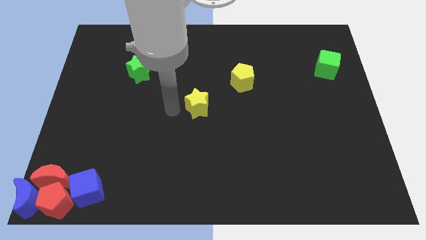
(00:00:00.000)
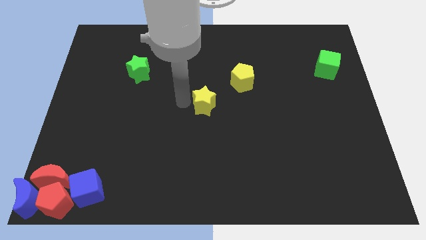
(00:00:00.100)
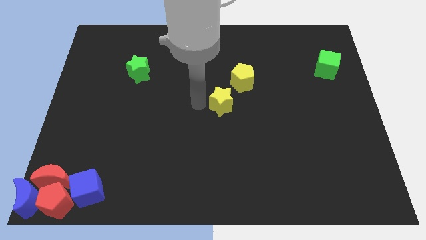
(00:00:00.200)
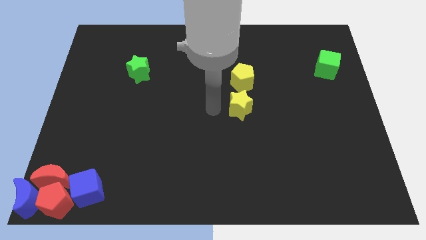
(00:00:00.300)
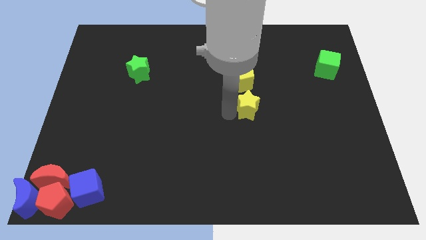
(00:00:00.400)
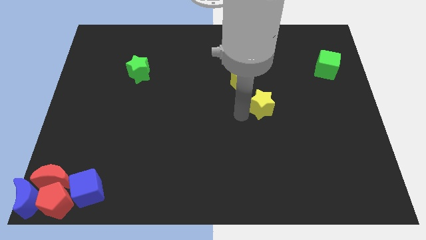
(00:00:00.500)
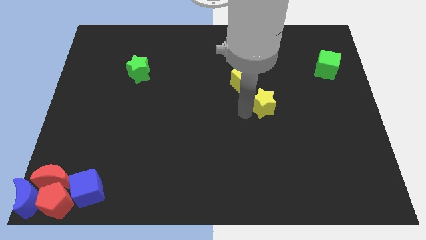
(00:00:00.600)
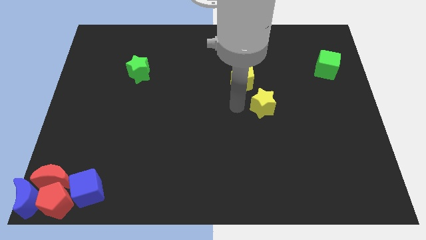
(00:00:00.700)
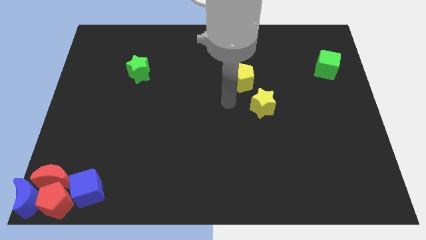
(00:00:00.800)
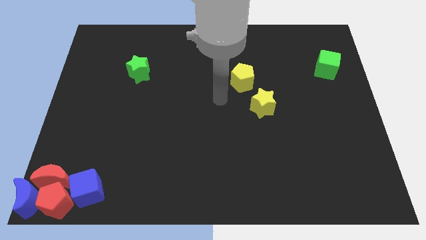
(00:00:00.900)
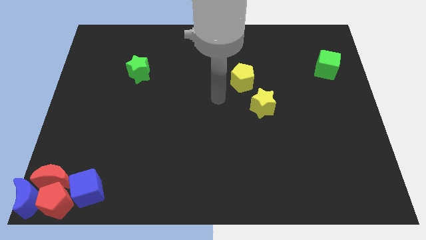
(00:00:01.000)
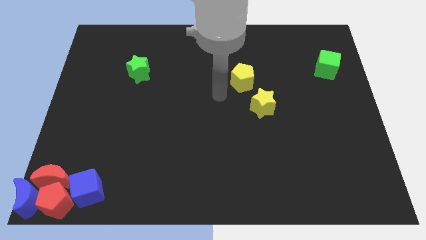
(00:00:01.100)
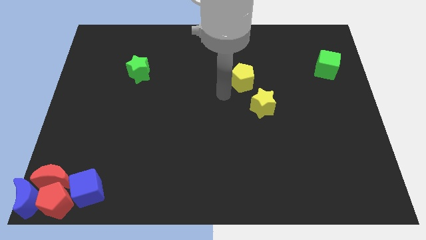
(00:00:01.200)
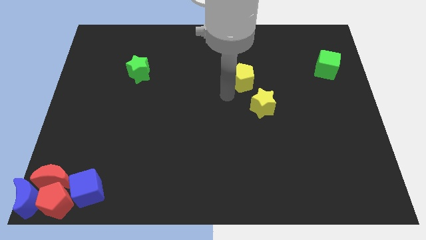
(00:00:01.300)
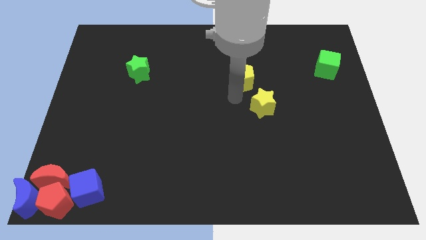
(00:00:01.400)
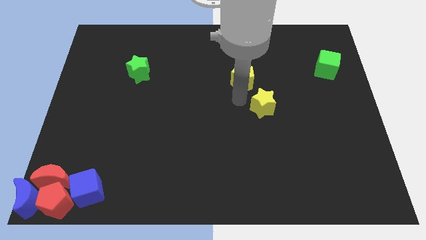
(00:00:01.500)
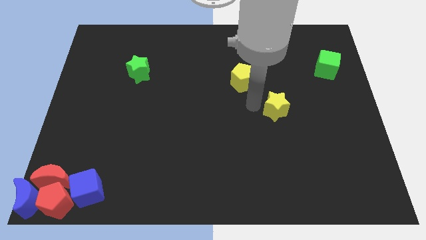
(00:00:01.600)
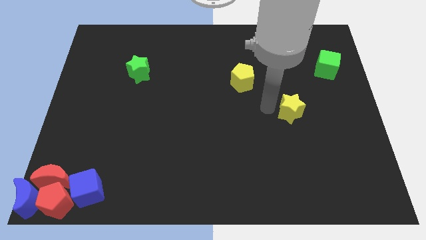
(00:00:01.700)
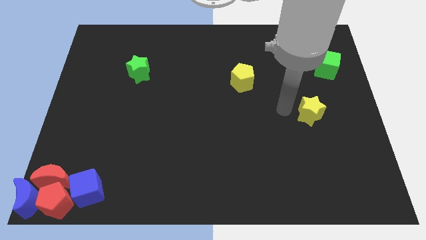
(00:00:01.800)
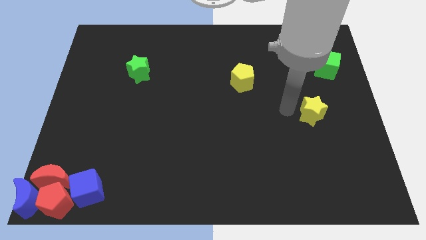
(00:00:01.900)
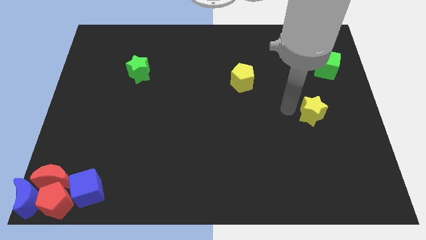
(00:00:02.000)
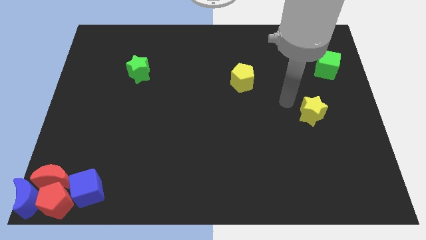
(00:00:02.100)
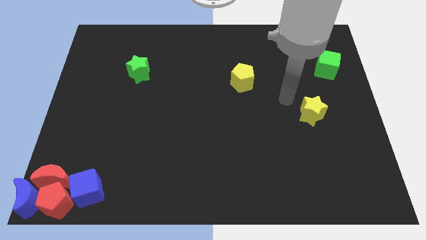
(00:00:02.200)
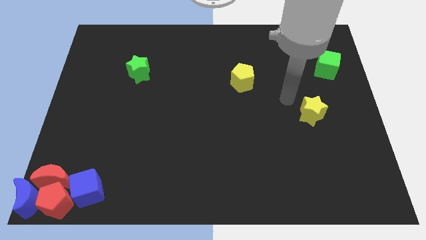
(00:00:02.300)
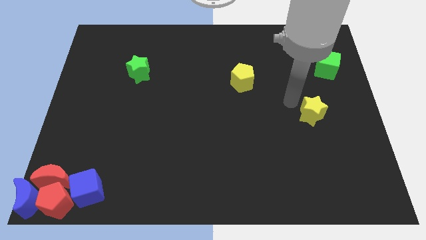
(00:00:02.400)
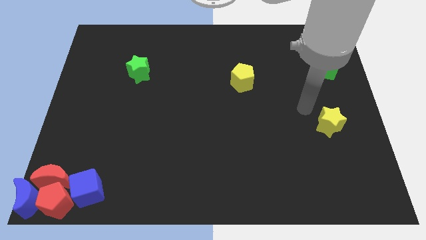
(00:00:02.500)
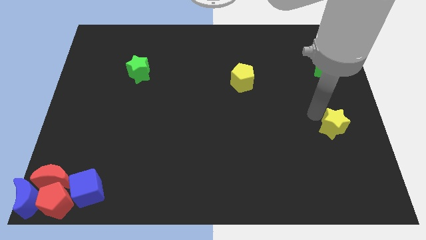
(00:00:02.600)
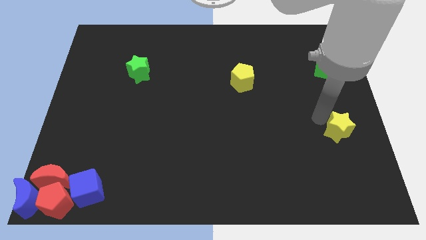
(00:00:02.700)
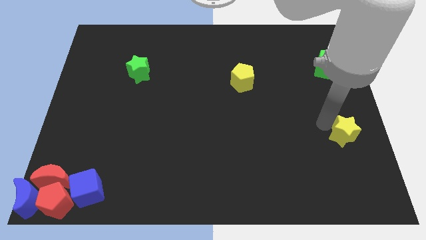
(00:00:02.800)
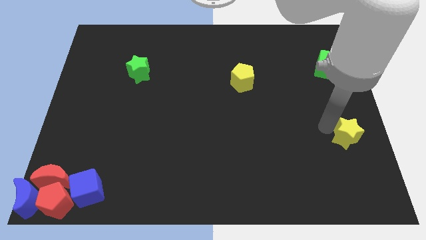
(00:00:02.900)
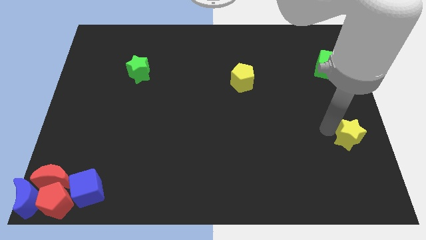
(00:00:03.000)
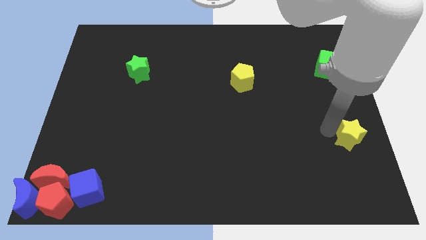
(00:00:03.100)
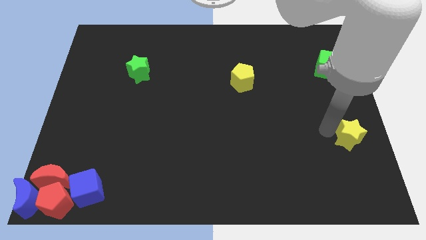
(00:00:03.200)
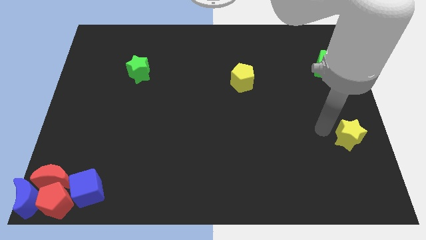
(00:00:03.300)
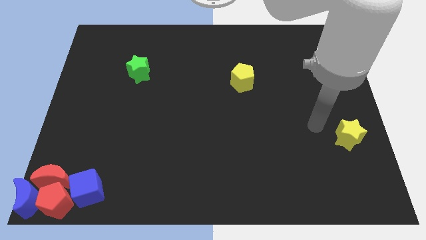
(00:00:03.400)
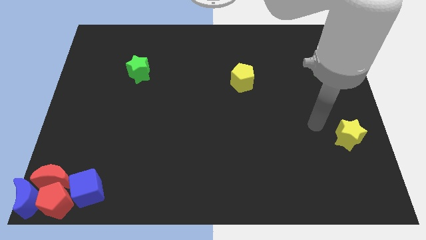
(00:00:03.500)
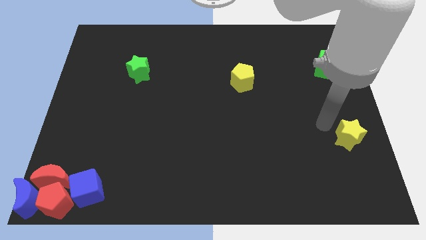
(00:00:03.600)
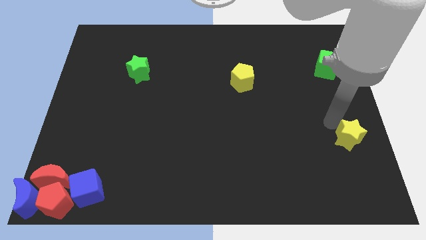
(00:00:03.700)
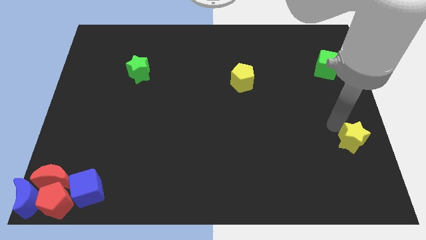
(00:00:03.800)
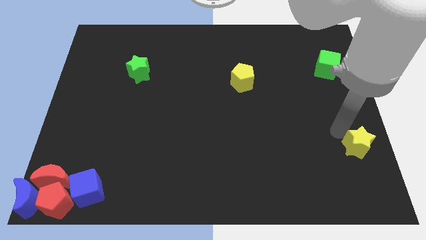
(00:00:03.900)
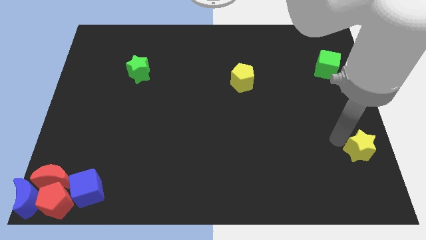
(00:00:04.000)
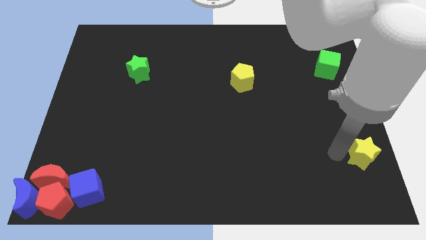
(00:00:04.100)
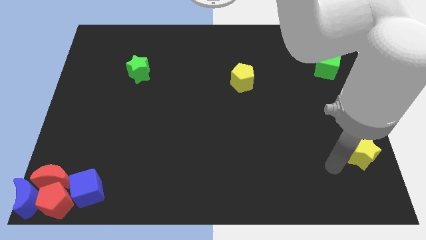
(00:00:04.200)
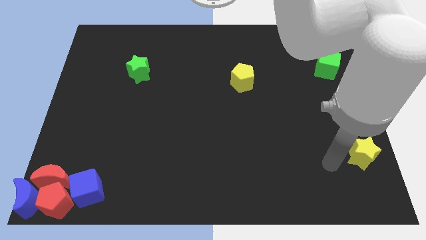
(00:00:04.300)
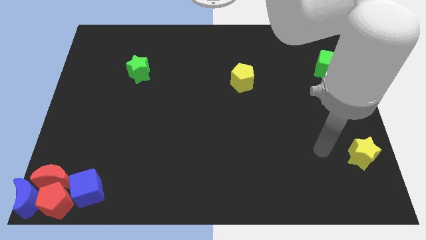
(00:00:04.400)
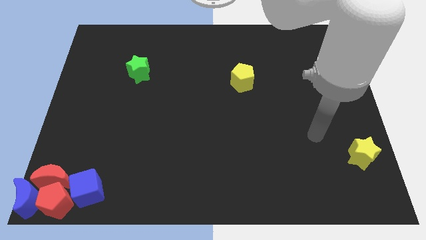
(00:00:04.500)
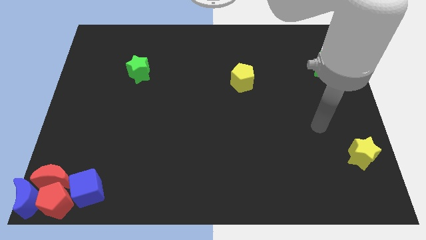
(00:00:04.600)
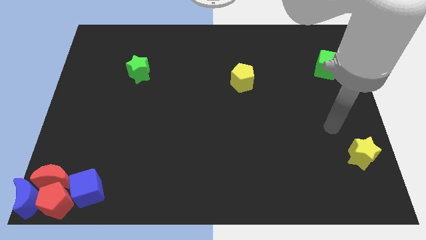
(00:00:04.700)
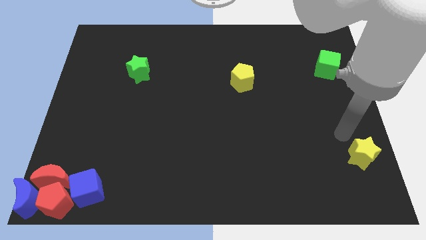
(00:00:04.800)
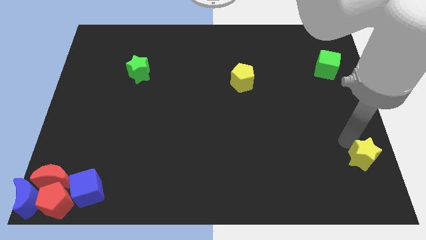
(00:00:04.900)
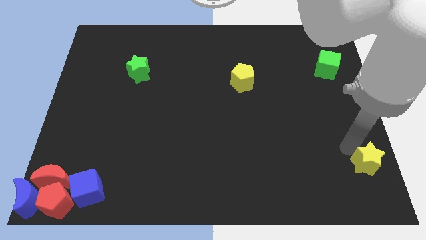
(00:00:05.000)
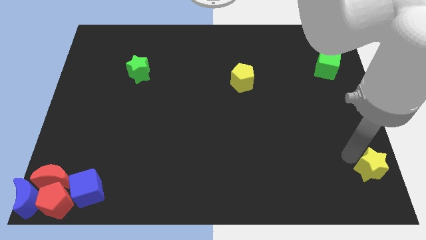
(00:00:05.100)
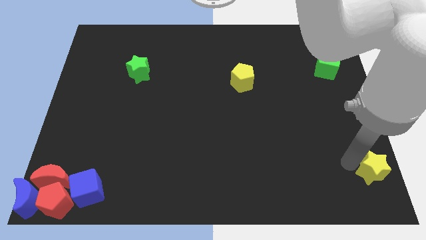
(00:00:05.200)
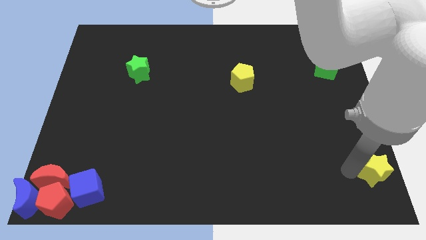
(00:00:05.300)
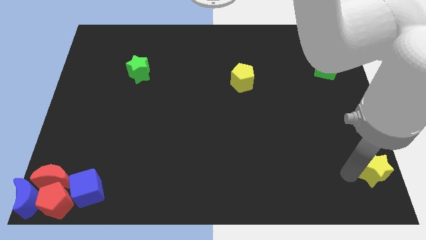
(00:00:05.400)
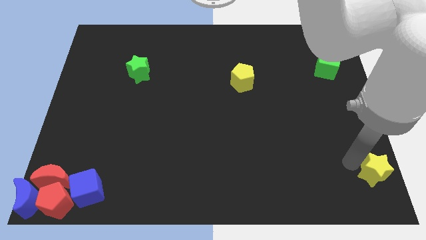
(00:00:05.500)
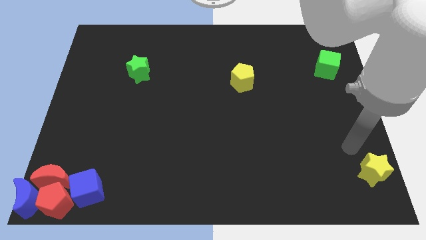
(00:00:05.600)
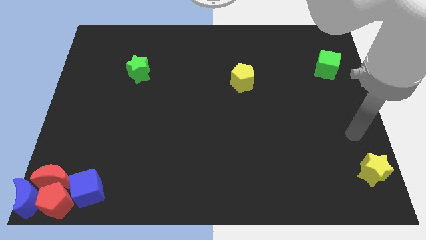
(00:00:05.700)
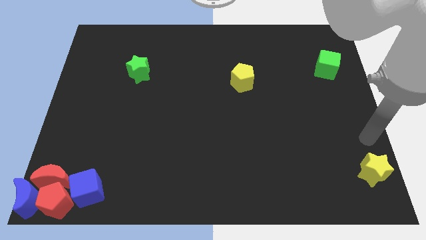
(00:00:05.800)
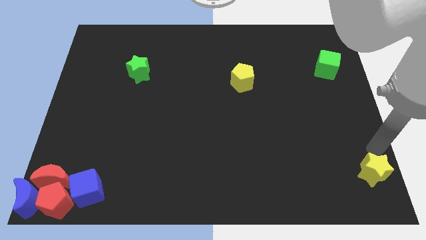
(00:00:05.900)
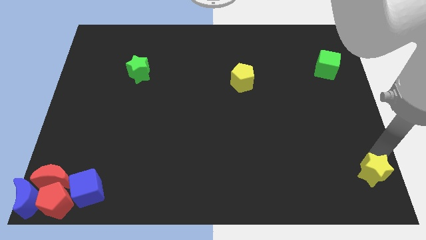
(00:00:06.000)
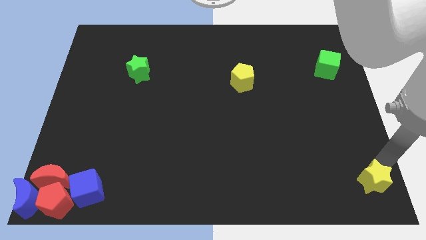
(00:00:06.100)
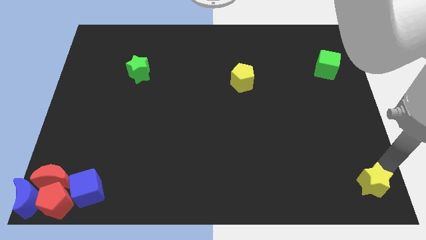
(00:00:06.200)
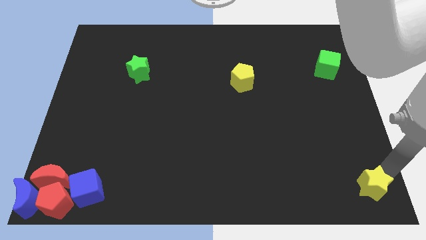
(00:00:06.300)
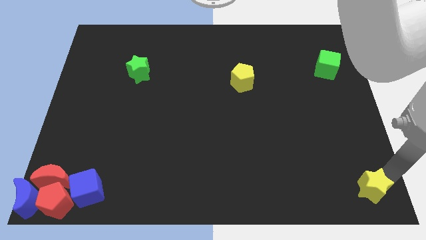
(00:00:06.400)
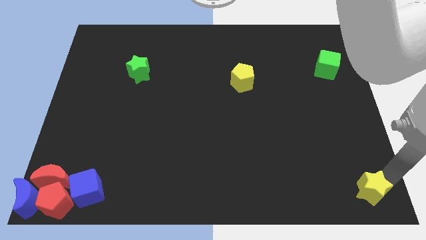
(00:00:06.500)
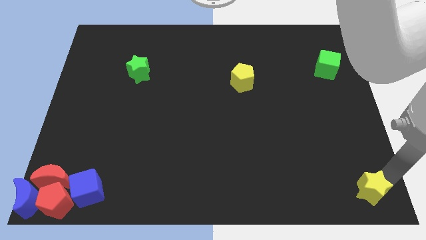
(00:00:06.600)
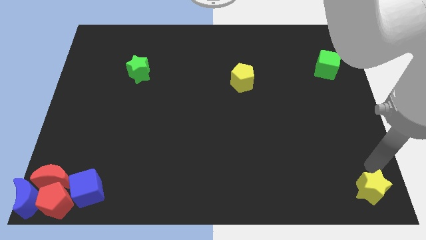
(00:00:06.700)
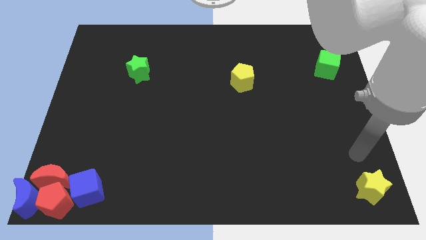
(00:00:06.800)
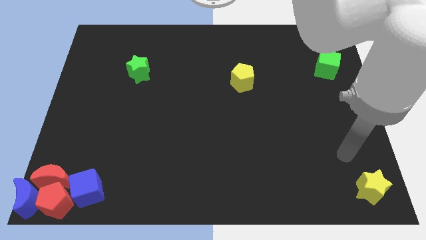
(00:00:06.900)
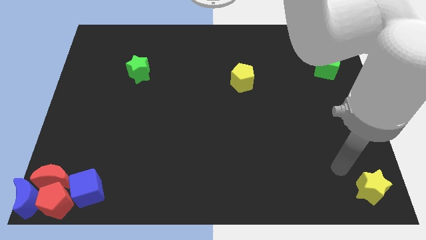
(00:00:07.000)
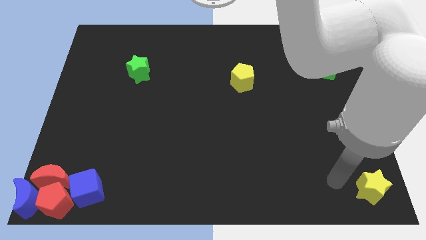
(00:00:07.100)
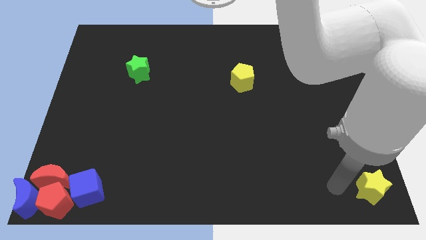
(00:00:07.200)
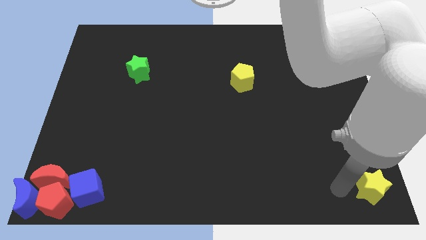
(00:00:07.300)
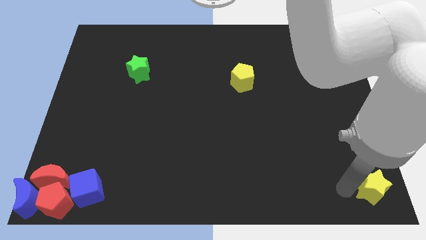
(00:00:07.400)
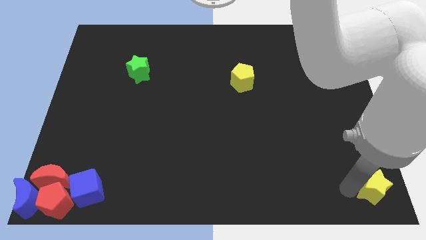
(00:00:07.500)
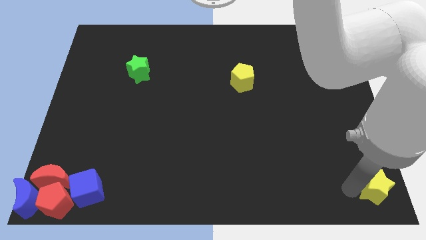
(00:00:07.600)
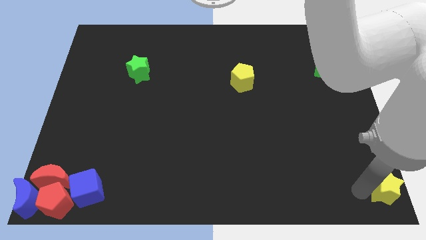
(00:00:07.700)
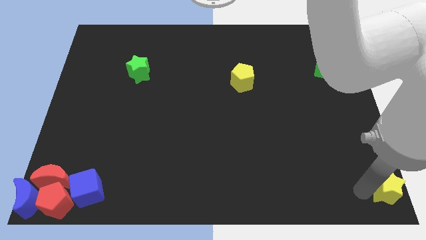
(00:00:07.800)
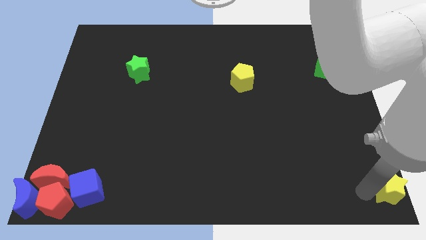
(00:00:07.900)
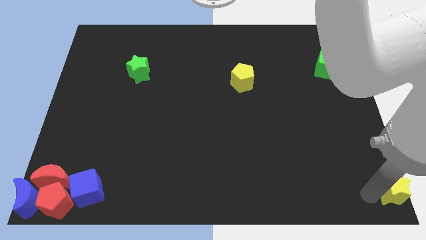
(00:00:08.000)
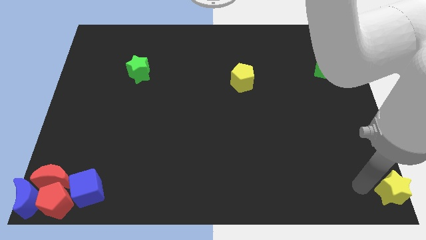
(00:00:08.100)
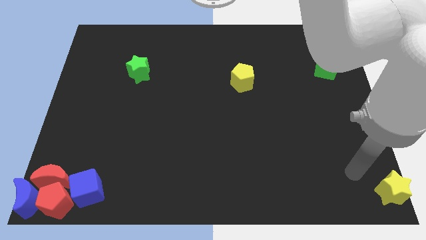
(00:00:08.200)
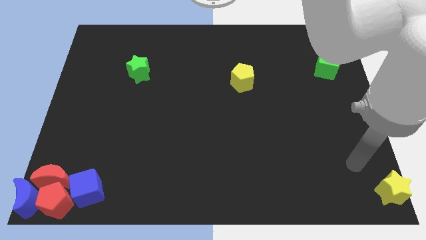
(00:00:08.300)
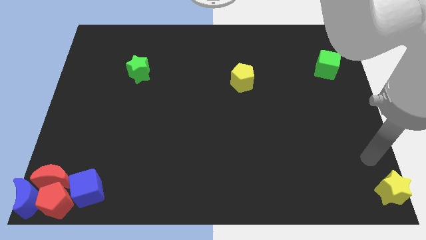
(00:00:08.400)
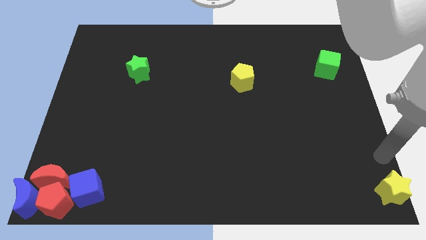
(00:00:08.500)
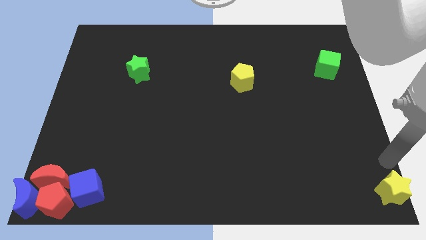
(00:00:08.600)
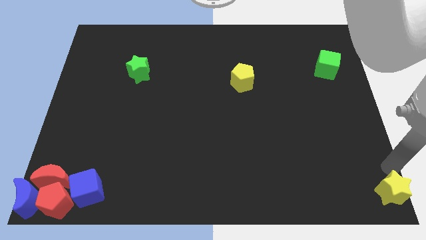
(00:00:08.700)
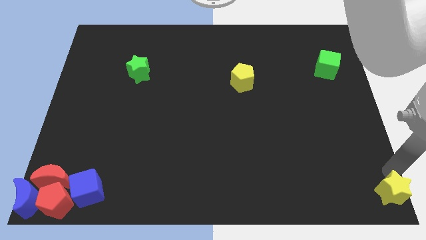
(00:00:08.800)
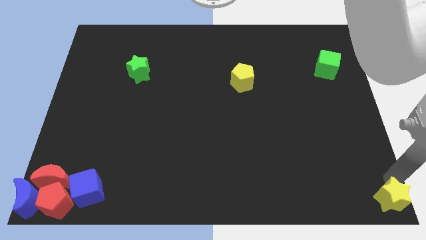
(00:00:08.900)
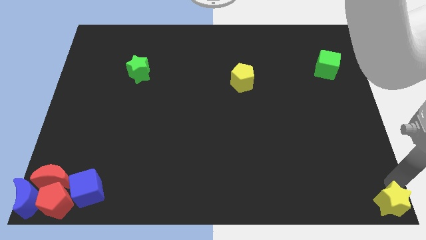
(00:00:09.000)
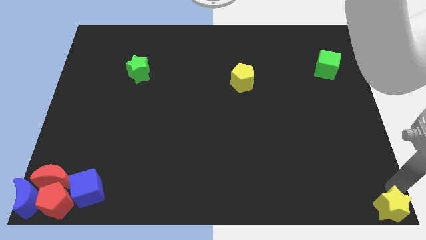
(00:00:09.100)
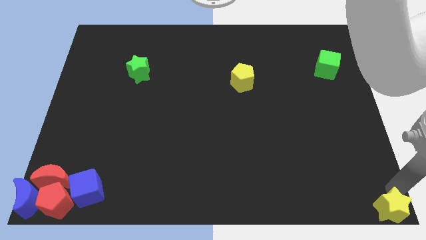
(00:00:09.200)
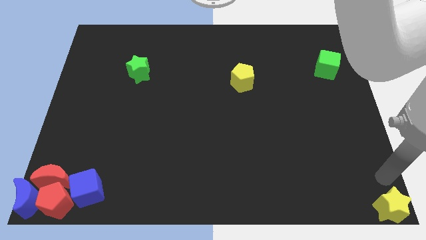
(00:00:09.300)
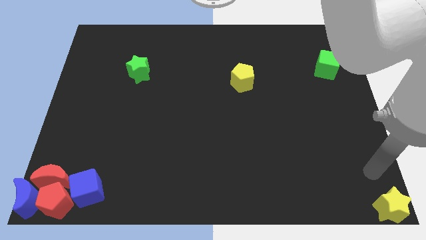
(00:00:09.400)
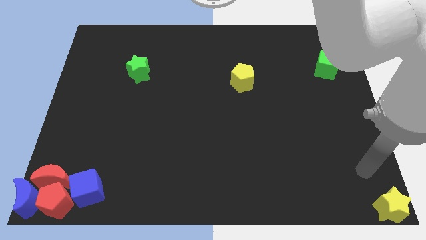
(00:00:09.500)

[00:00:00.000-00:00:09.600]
place the yellow star at the bottom right corner of the board
